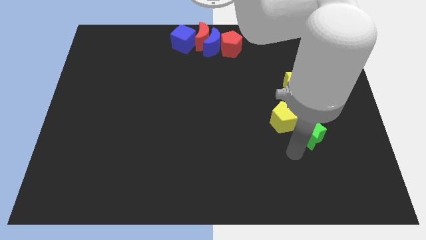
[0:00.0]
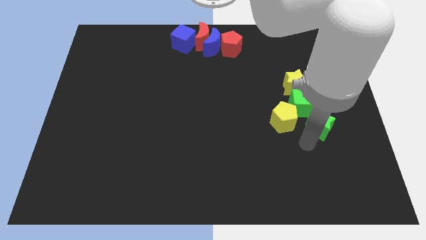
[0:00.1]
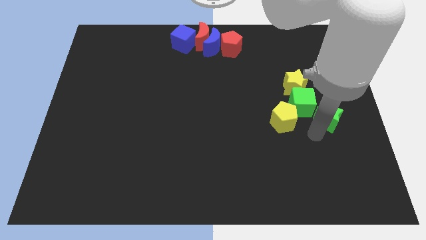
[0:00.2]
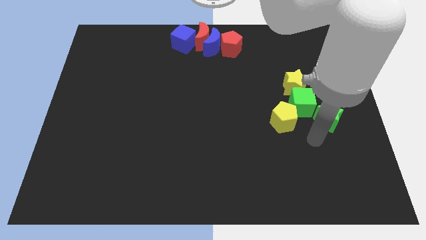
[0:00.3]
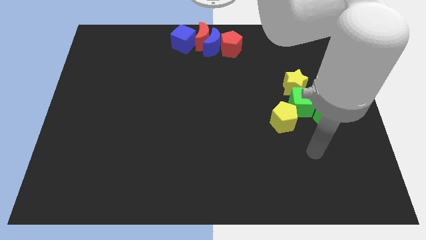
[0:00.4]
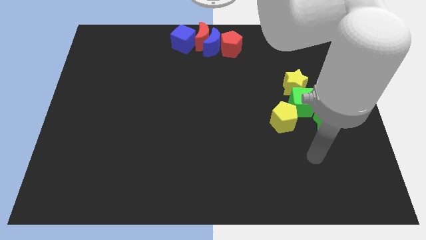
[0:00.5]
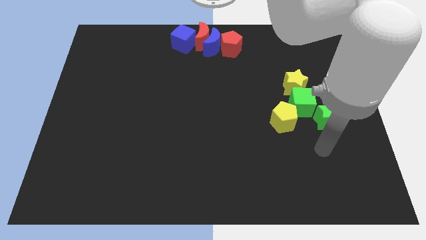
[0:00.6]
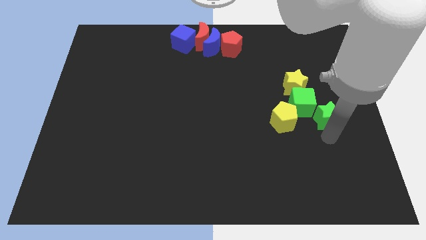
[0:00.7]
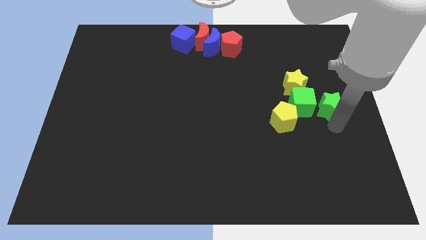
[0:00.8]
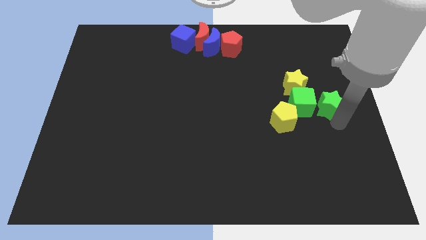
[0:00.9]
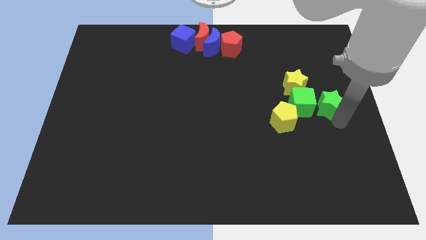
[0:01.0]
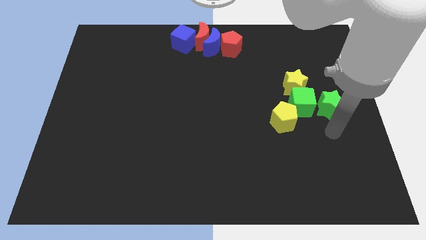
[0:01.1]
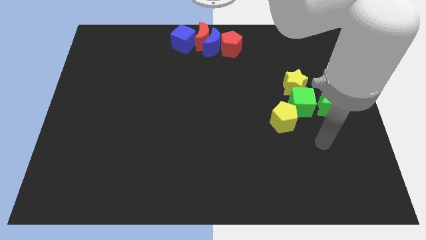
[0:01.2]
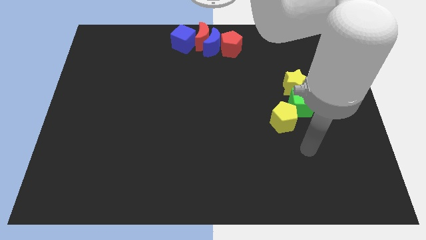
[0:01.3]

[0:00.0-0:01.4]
place the green star to the right side of the green cube

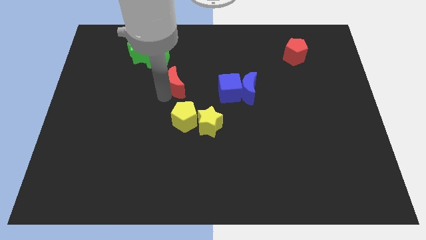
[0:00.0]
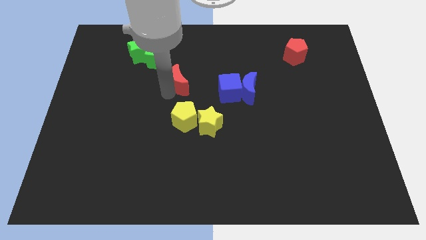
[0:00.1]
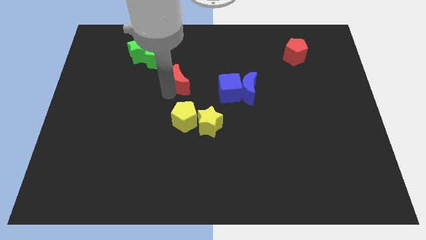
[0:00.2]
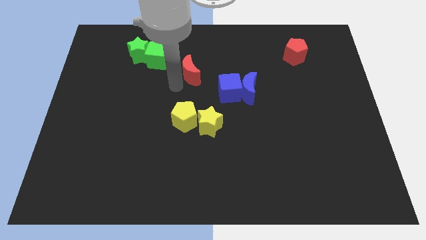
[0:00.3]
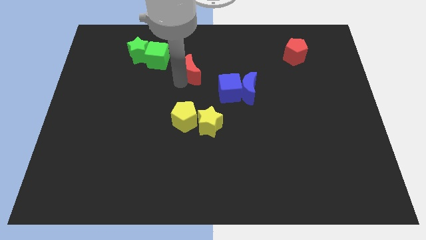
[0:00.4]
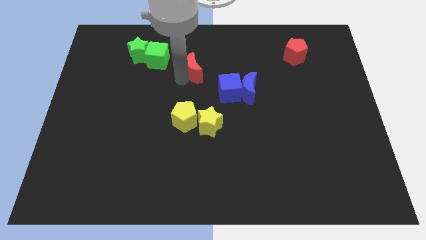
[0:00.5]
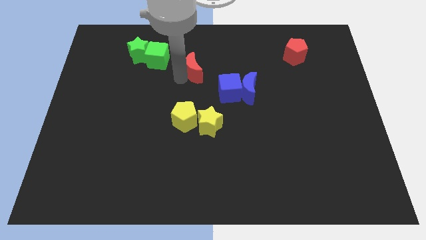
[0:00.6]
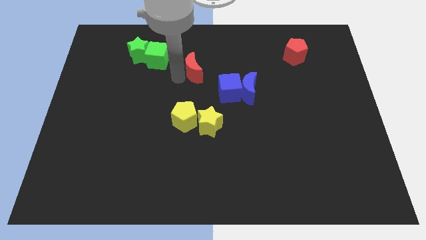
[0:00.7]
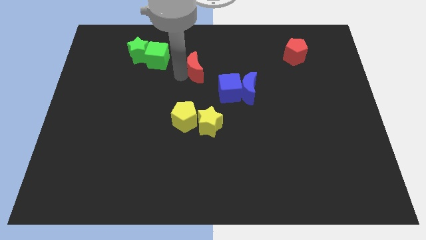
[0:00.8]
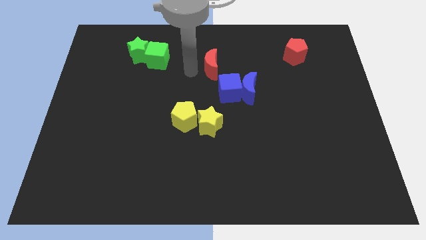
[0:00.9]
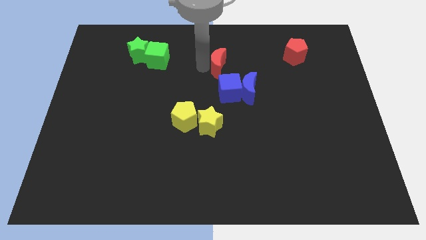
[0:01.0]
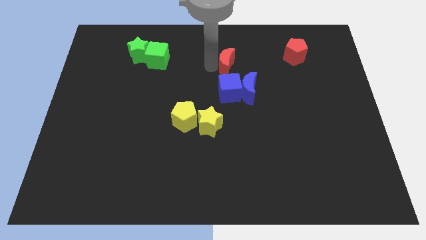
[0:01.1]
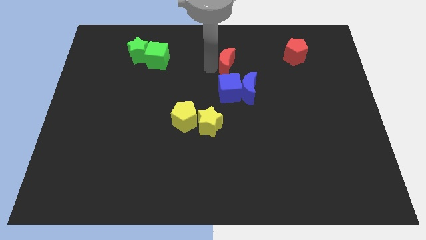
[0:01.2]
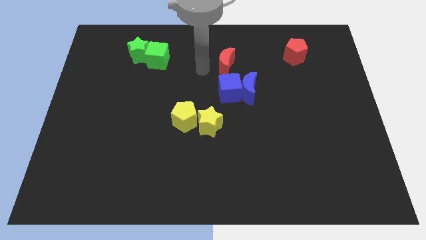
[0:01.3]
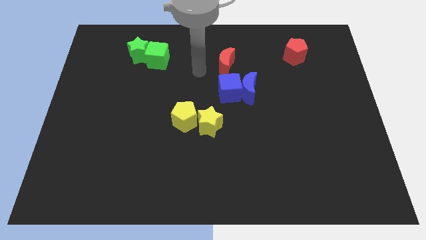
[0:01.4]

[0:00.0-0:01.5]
put the red moon above the blue cube

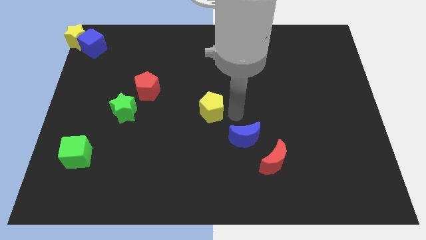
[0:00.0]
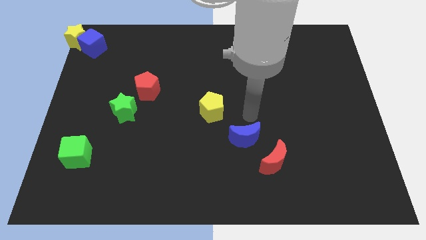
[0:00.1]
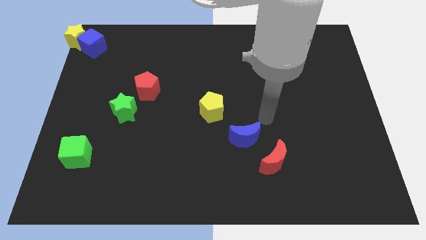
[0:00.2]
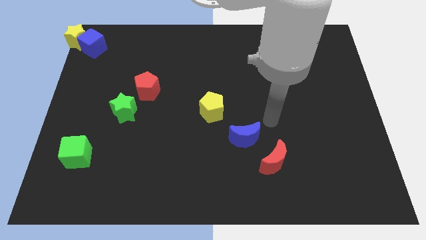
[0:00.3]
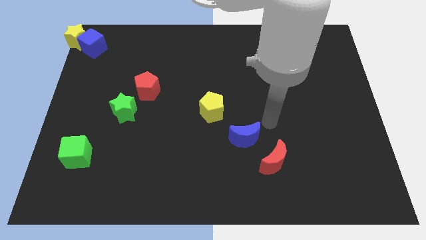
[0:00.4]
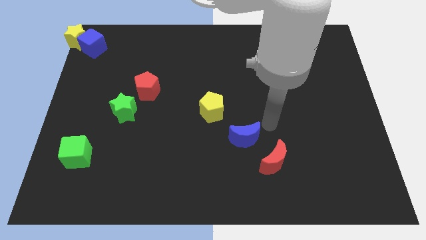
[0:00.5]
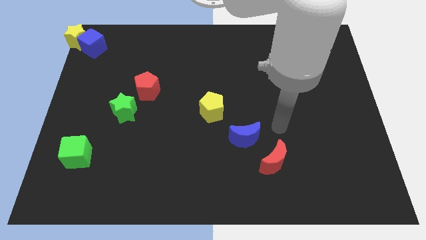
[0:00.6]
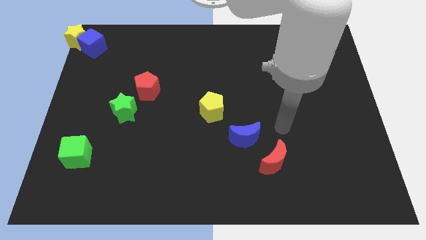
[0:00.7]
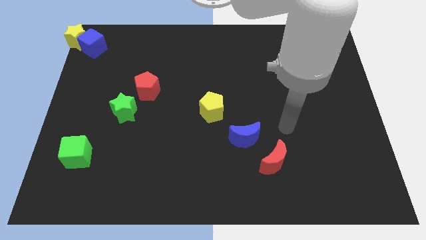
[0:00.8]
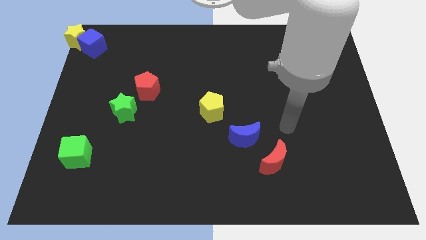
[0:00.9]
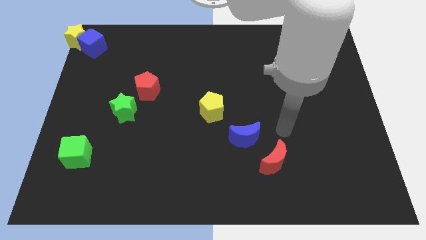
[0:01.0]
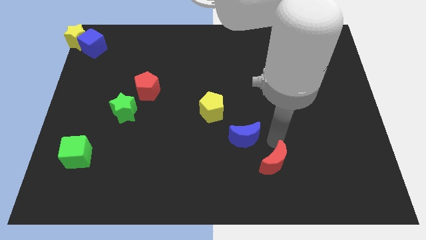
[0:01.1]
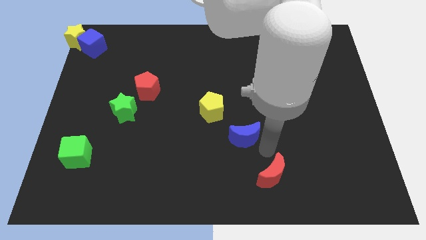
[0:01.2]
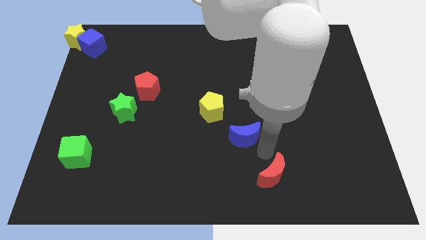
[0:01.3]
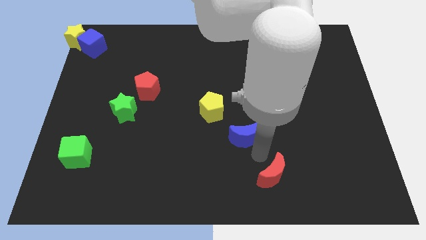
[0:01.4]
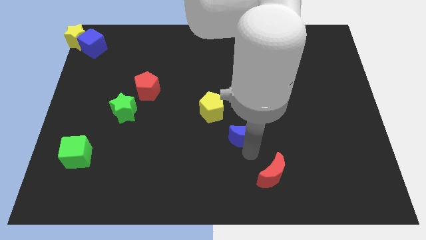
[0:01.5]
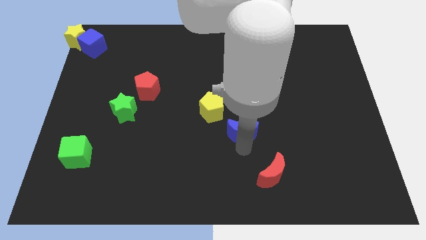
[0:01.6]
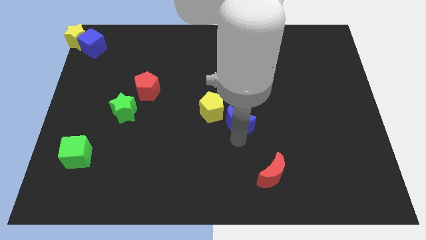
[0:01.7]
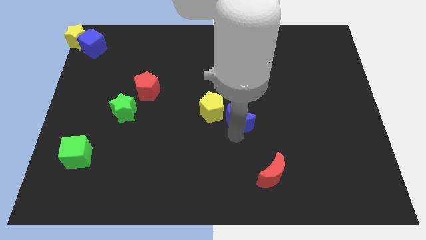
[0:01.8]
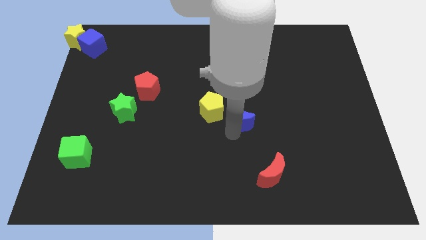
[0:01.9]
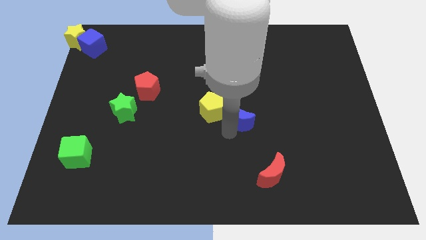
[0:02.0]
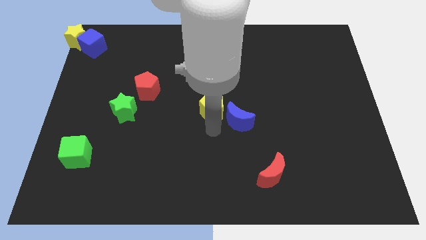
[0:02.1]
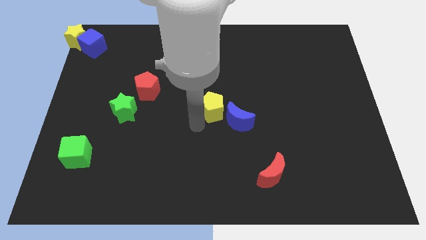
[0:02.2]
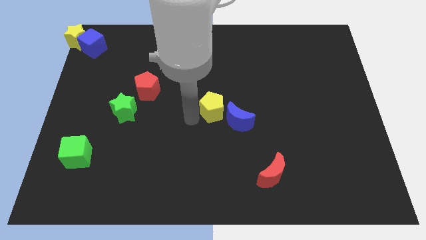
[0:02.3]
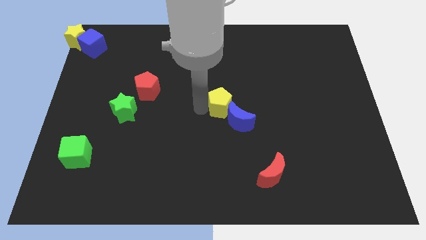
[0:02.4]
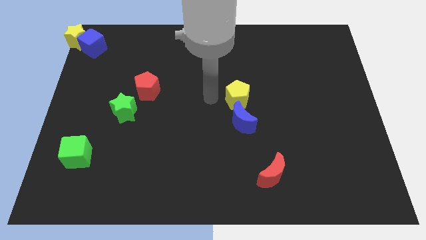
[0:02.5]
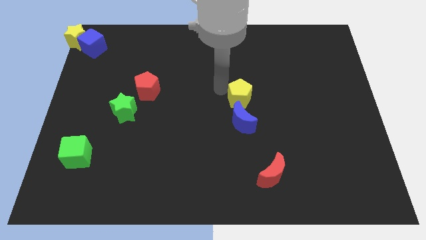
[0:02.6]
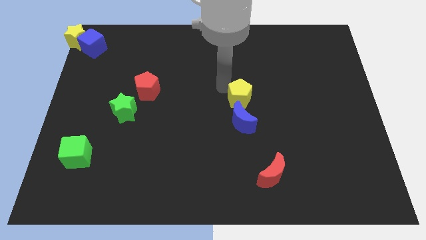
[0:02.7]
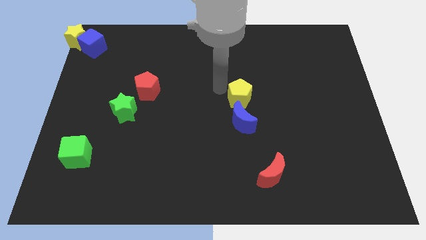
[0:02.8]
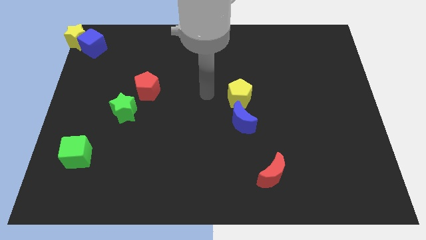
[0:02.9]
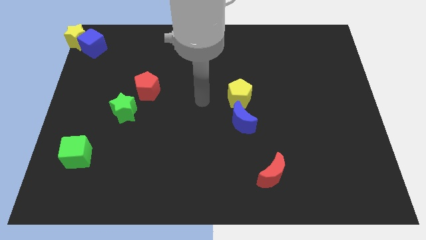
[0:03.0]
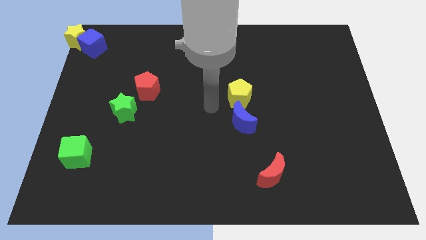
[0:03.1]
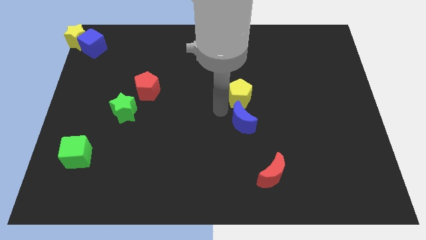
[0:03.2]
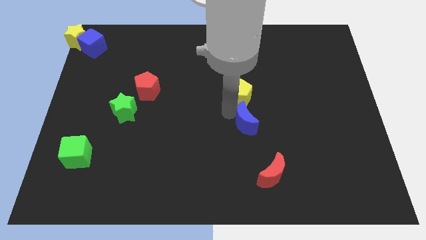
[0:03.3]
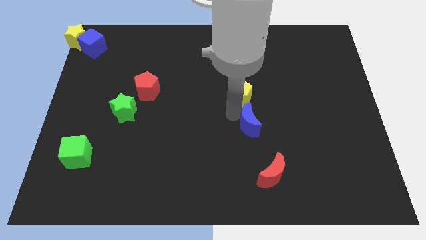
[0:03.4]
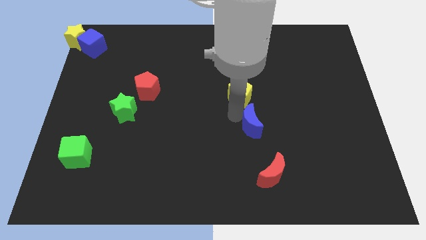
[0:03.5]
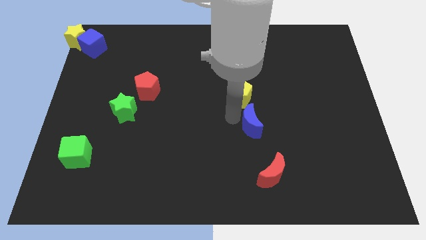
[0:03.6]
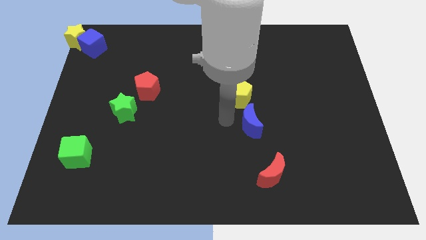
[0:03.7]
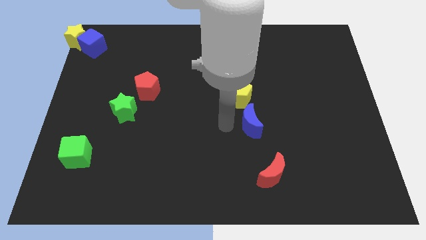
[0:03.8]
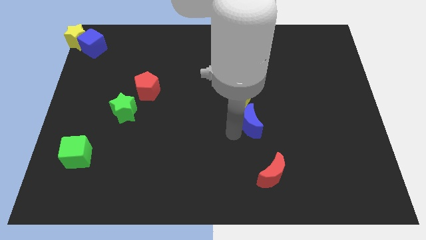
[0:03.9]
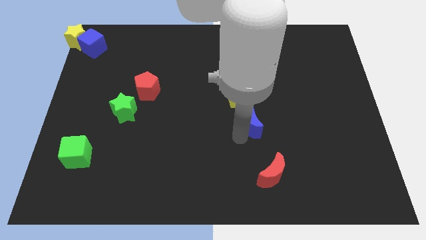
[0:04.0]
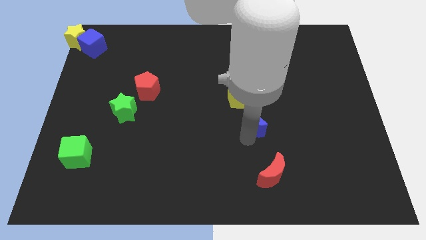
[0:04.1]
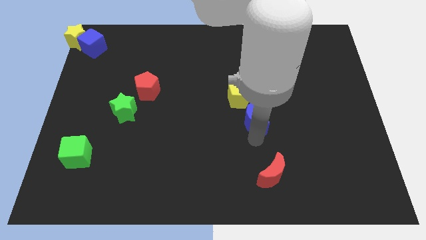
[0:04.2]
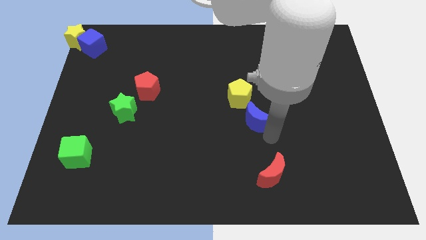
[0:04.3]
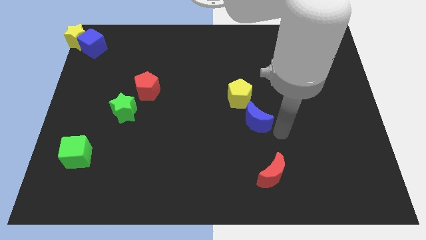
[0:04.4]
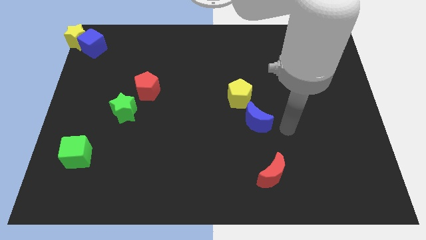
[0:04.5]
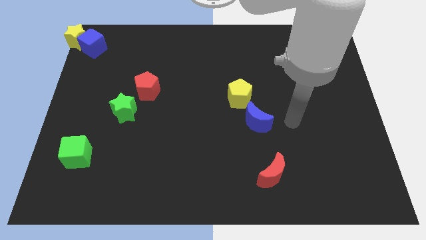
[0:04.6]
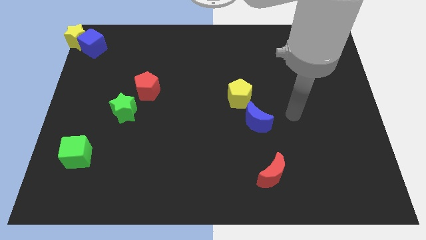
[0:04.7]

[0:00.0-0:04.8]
push the yellow pentagon and the blue crescent to the top left of the red crescent

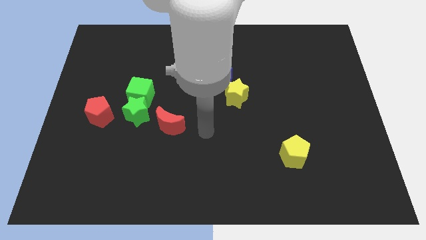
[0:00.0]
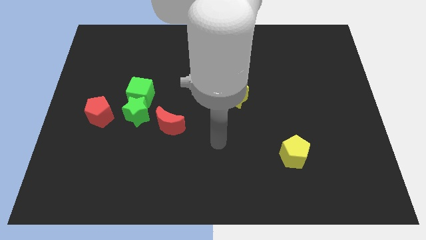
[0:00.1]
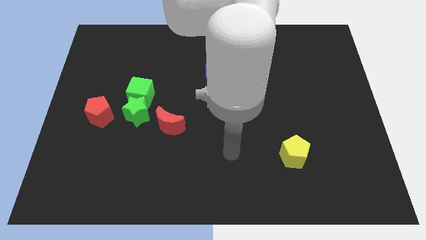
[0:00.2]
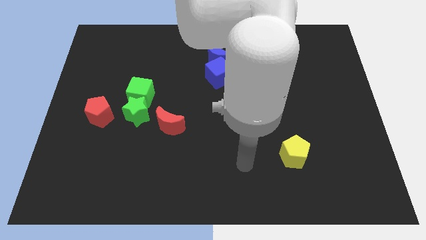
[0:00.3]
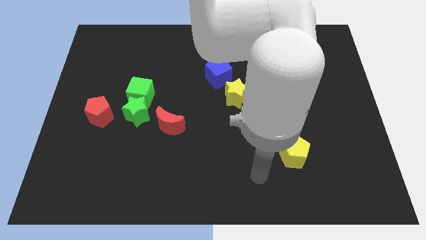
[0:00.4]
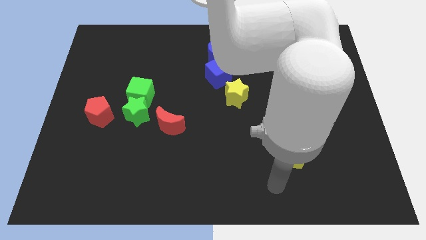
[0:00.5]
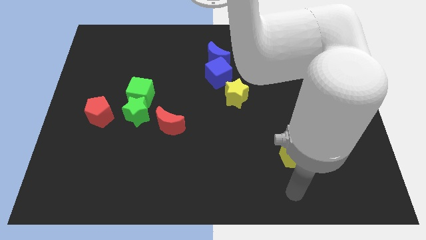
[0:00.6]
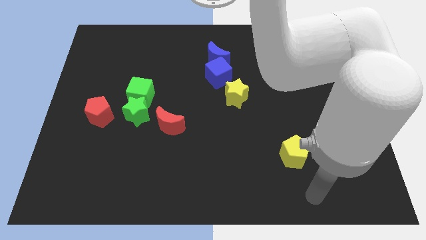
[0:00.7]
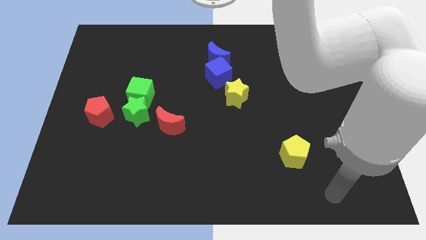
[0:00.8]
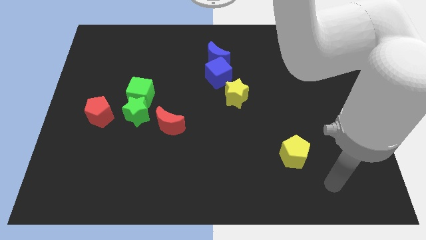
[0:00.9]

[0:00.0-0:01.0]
move your arm towards the bottom right corner of the board

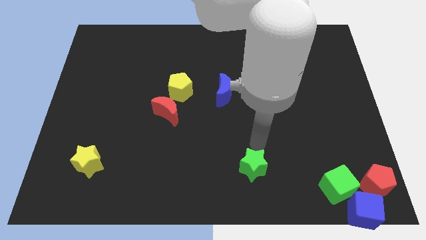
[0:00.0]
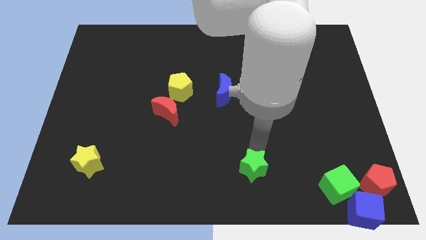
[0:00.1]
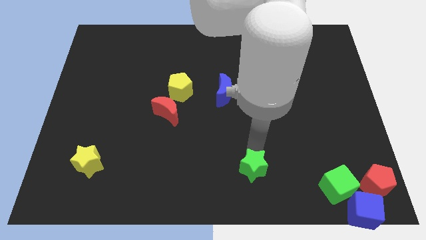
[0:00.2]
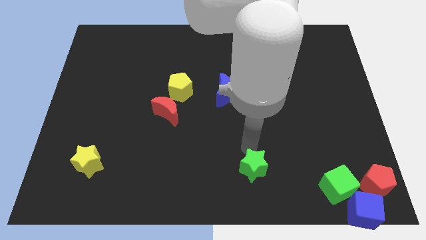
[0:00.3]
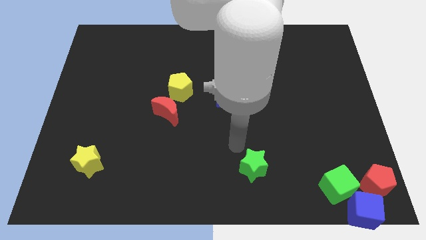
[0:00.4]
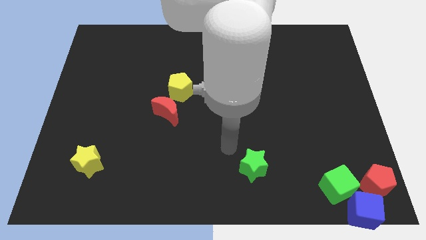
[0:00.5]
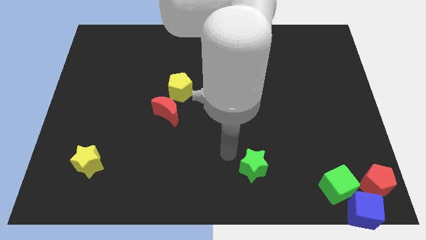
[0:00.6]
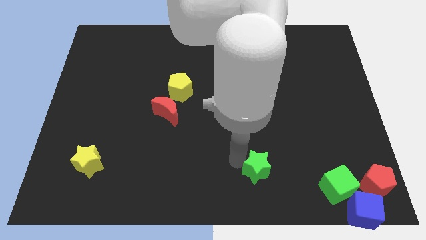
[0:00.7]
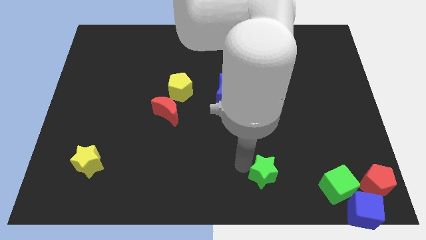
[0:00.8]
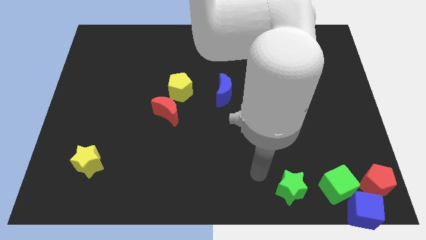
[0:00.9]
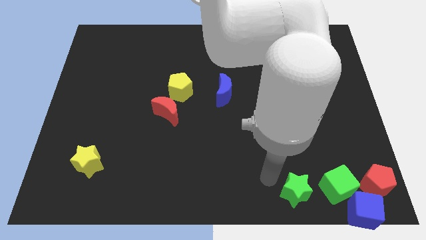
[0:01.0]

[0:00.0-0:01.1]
push the green star towards the green cube
